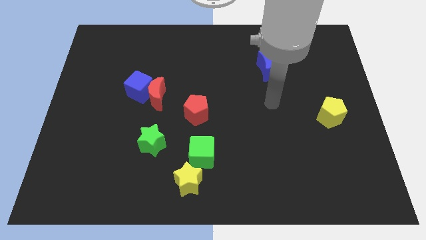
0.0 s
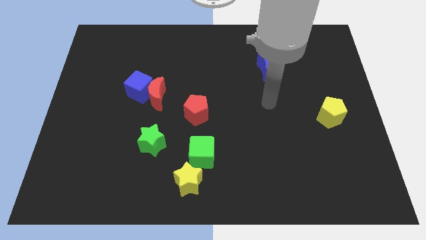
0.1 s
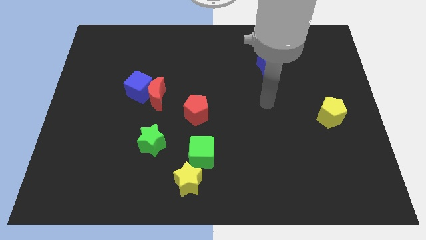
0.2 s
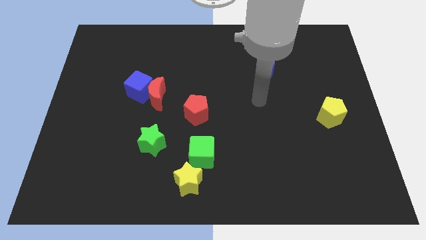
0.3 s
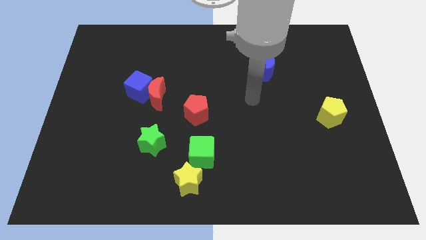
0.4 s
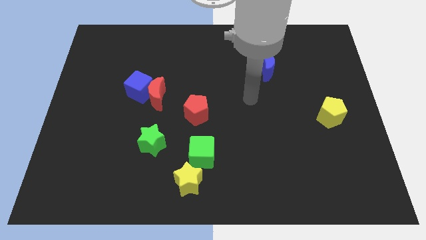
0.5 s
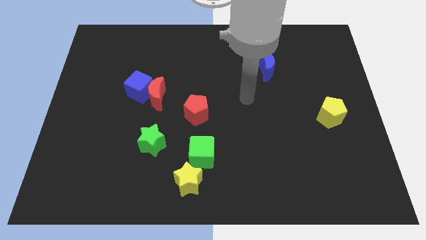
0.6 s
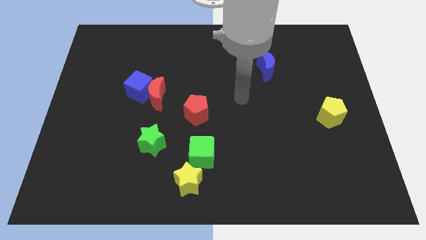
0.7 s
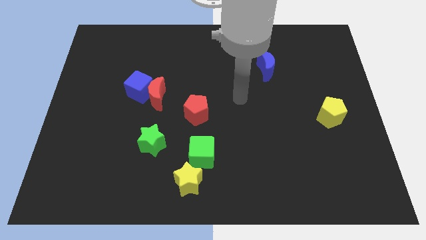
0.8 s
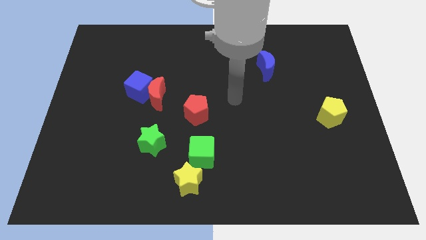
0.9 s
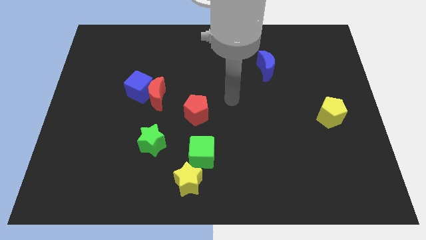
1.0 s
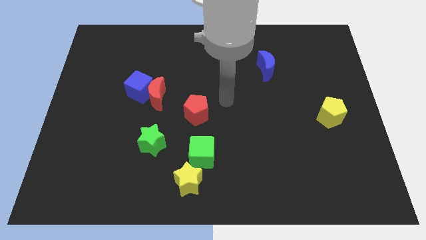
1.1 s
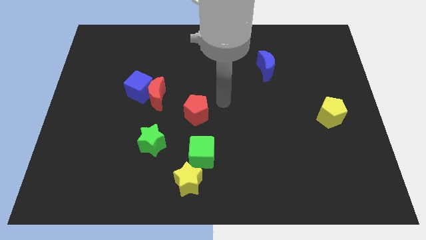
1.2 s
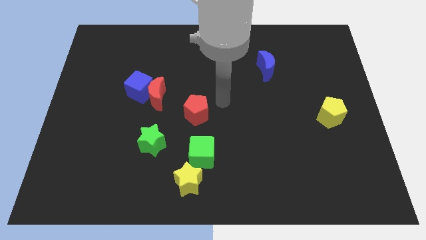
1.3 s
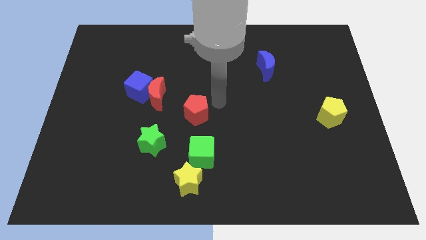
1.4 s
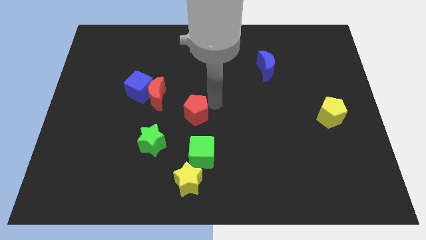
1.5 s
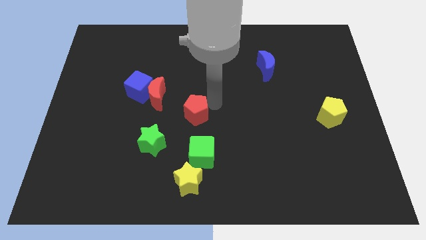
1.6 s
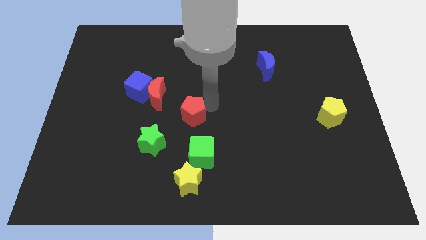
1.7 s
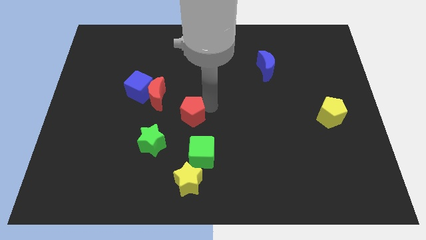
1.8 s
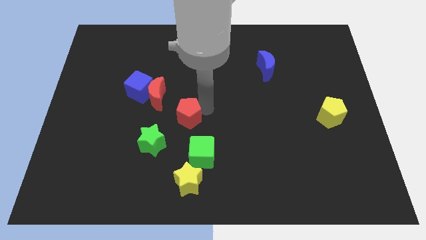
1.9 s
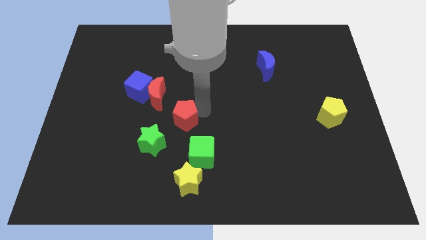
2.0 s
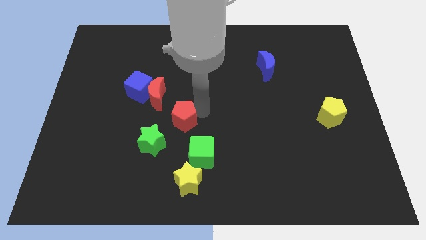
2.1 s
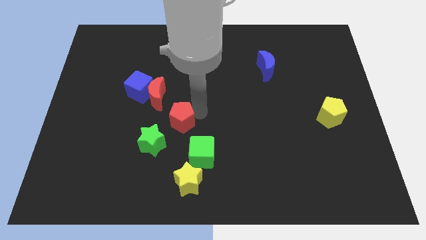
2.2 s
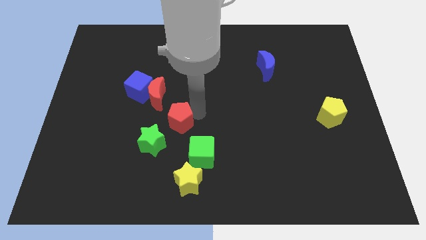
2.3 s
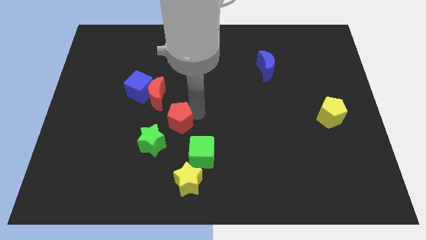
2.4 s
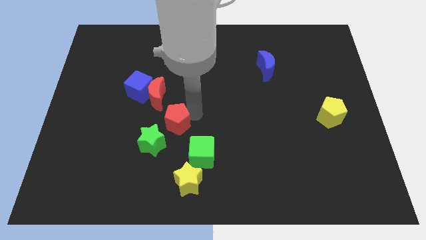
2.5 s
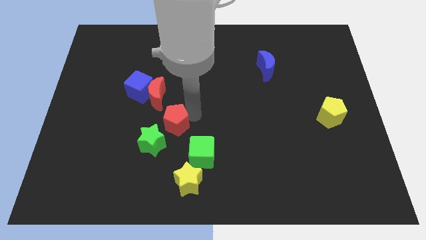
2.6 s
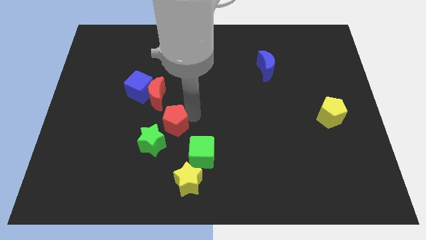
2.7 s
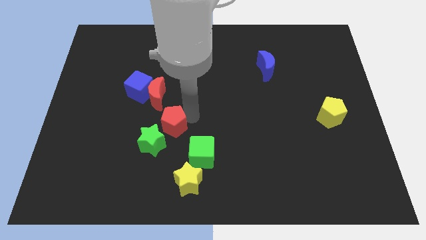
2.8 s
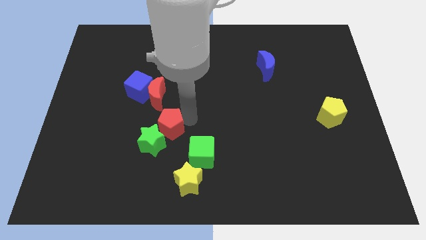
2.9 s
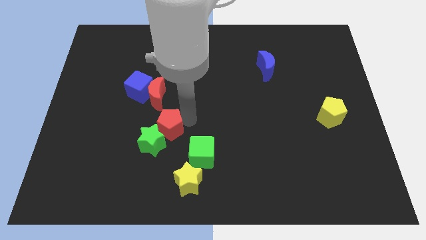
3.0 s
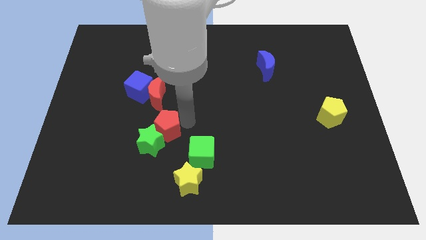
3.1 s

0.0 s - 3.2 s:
put the red pentagon towards the green star

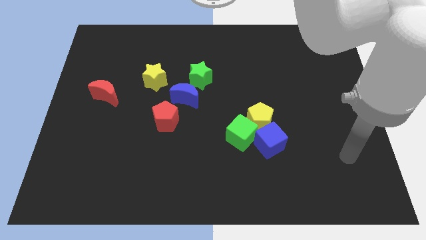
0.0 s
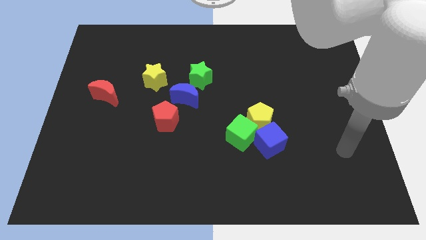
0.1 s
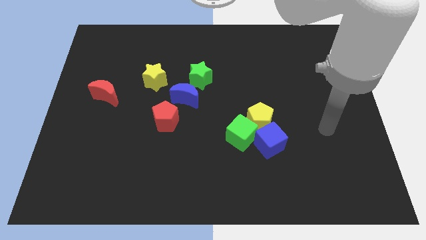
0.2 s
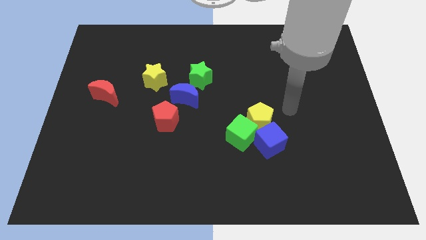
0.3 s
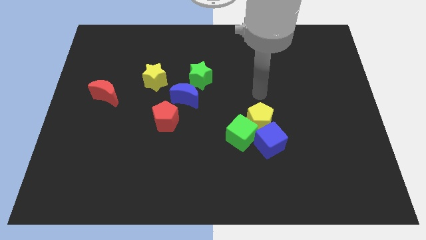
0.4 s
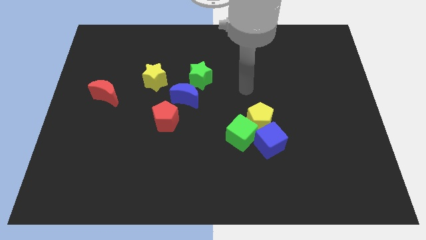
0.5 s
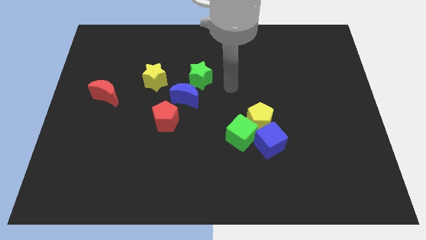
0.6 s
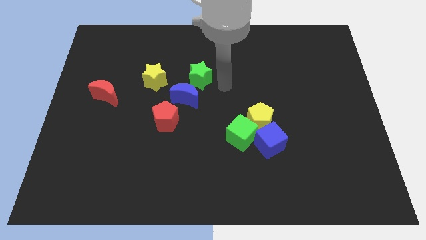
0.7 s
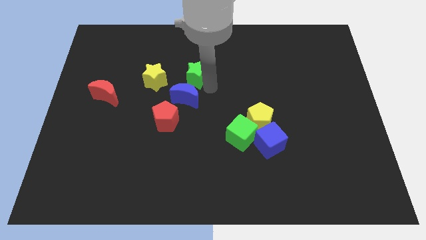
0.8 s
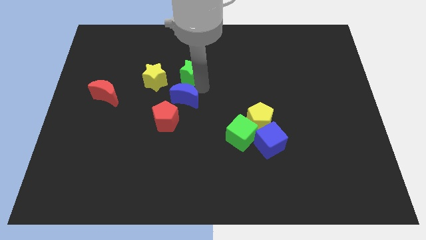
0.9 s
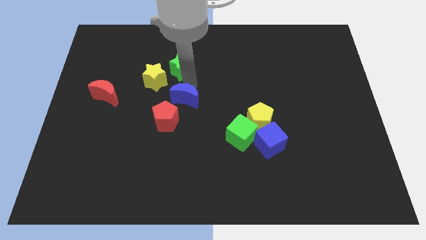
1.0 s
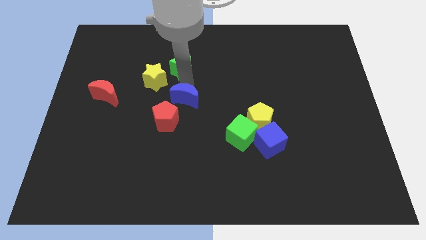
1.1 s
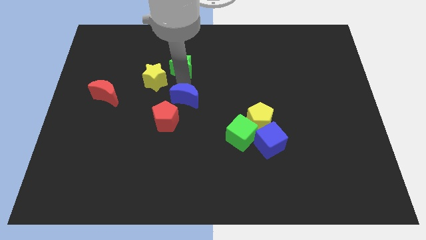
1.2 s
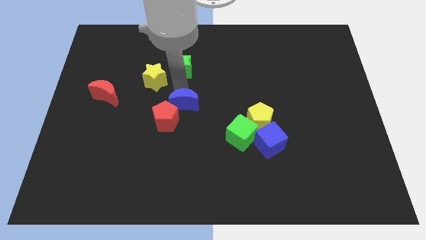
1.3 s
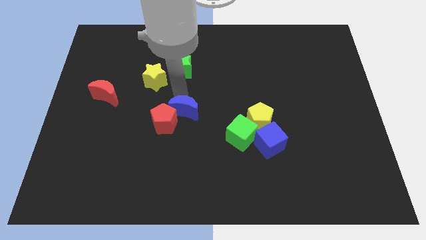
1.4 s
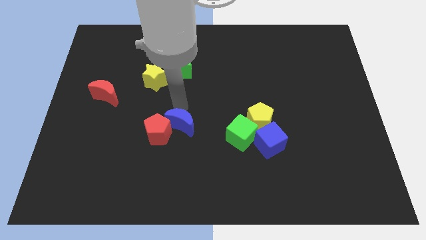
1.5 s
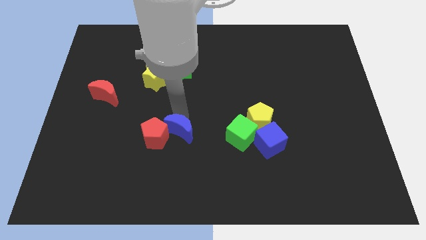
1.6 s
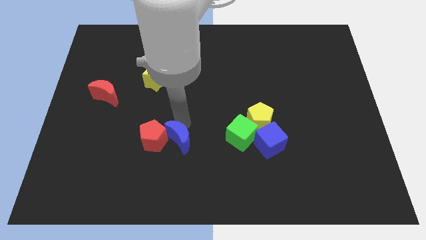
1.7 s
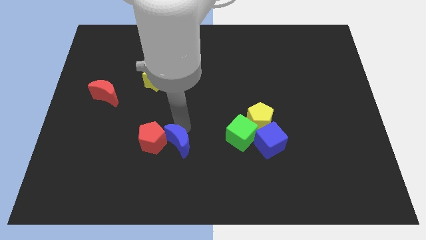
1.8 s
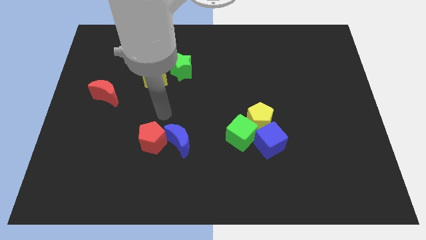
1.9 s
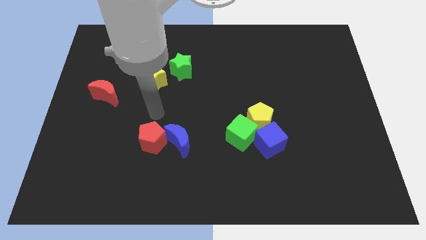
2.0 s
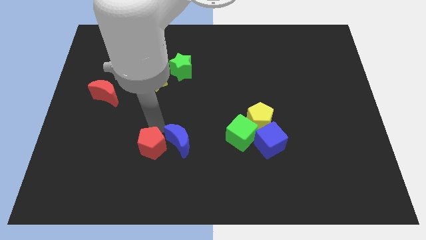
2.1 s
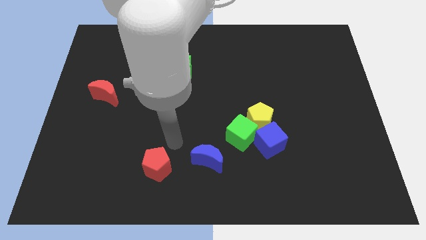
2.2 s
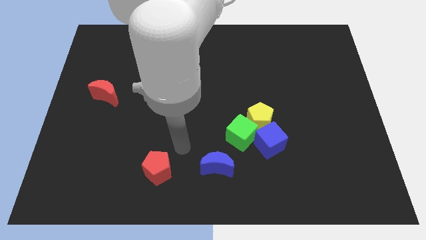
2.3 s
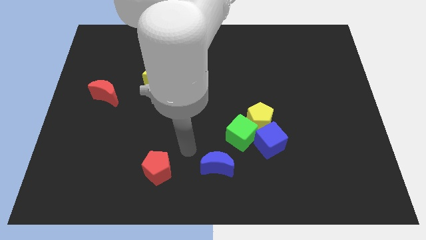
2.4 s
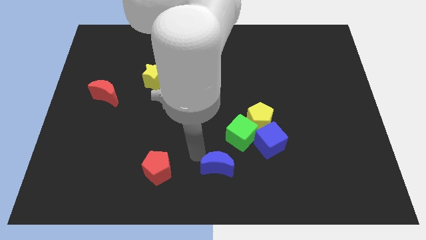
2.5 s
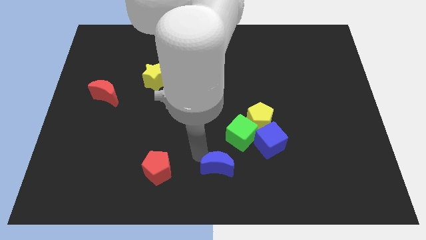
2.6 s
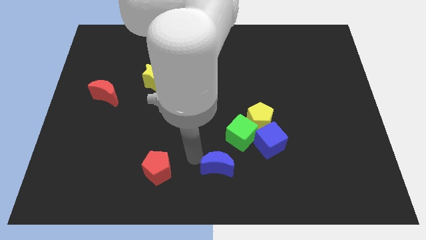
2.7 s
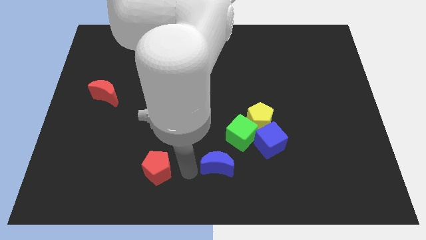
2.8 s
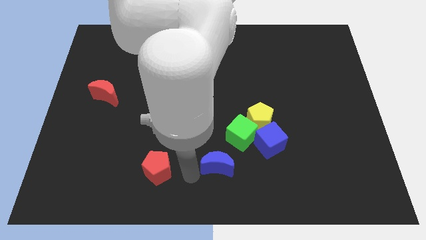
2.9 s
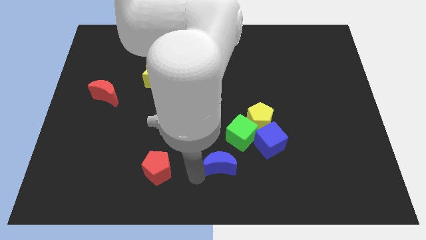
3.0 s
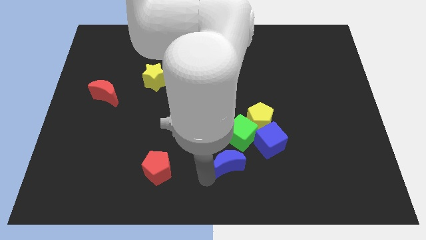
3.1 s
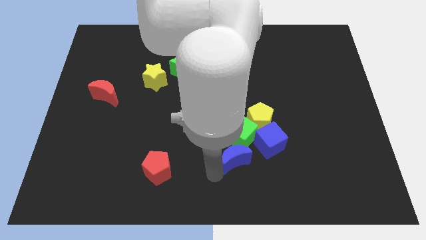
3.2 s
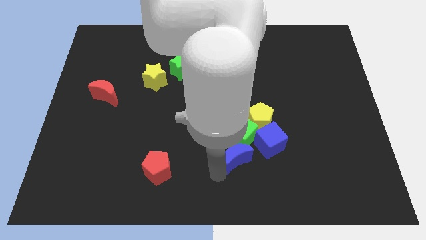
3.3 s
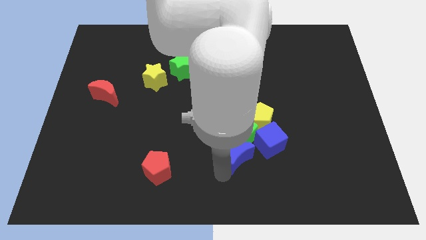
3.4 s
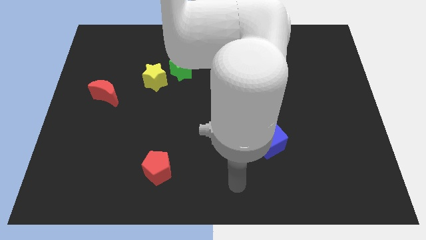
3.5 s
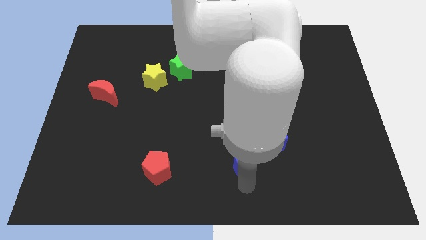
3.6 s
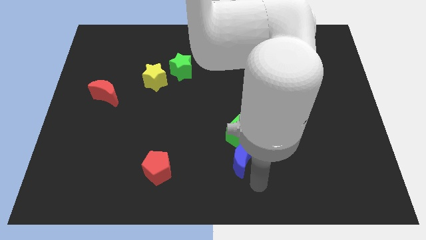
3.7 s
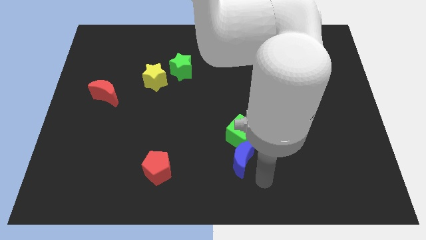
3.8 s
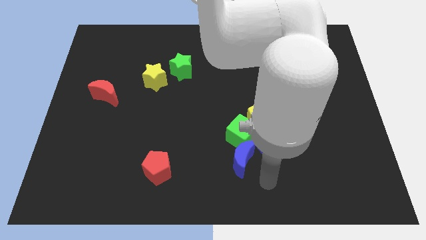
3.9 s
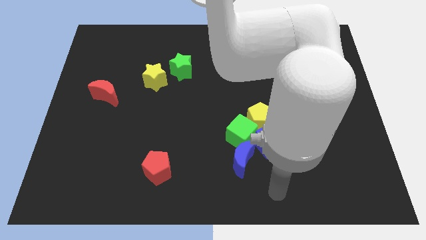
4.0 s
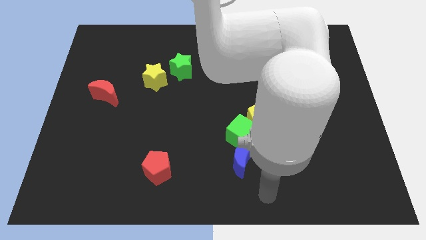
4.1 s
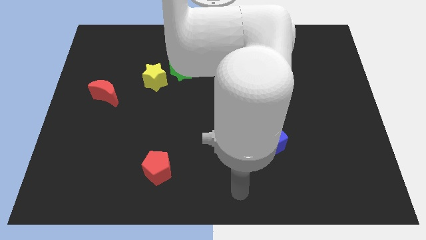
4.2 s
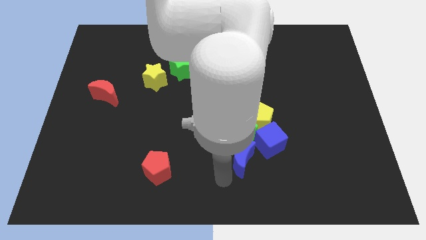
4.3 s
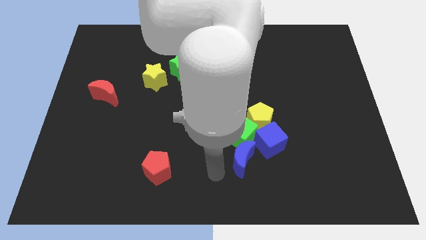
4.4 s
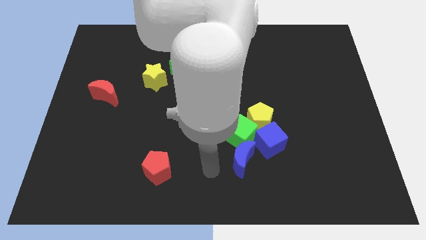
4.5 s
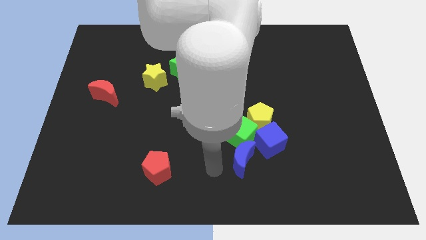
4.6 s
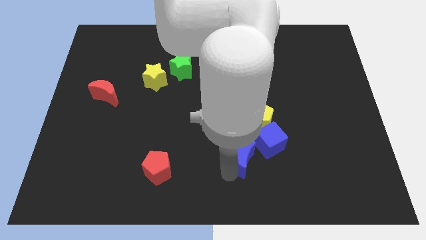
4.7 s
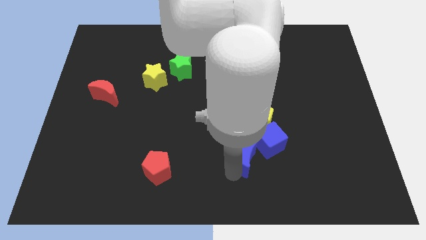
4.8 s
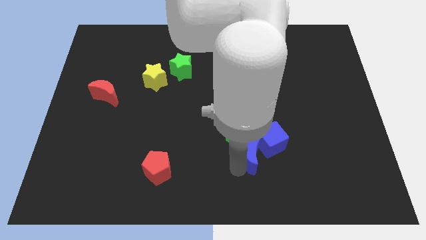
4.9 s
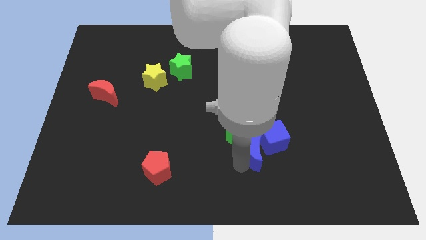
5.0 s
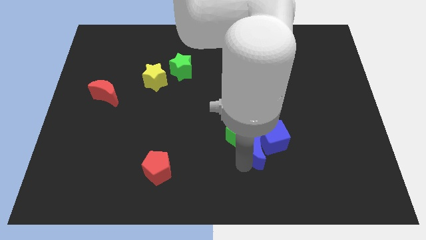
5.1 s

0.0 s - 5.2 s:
put the blue moon to the blue cube
